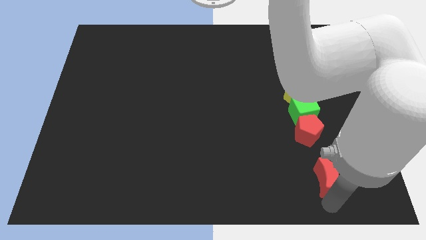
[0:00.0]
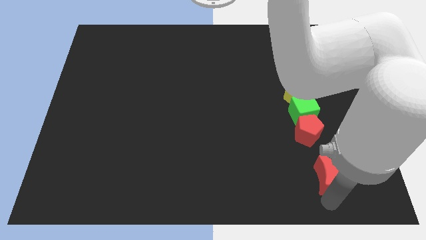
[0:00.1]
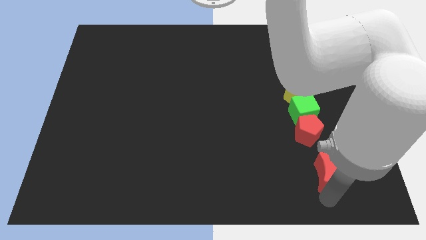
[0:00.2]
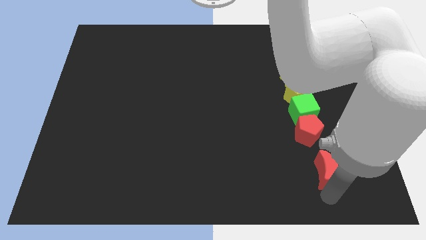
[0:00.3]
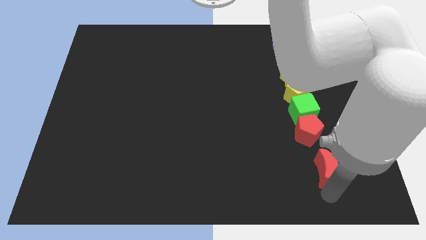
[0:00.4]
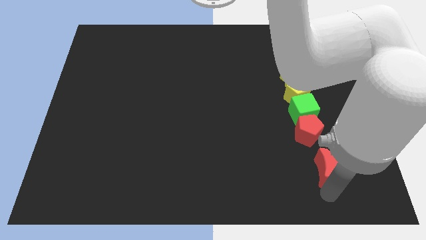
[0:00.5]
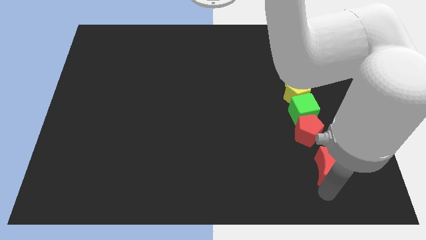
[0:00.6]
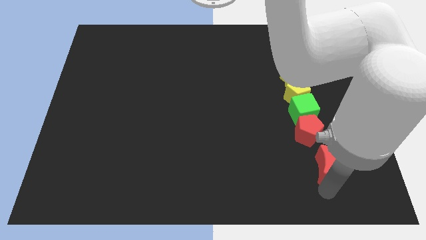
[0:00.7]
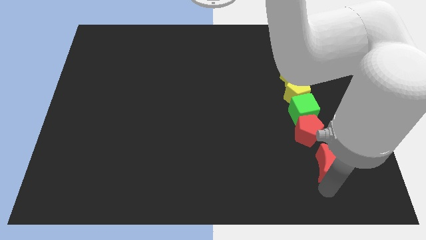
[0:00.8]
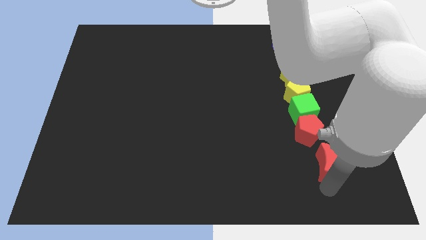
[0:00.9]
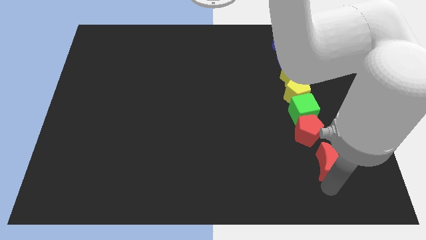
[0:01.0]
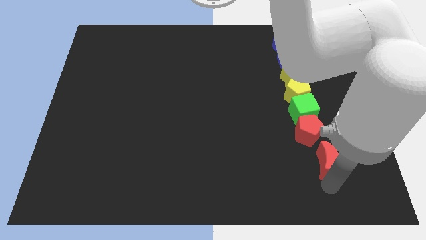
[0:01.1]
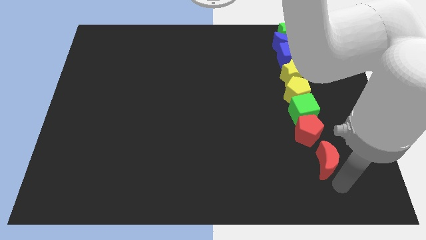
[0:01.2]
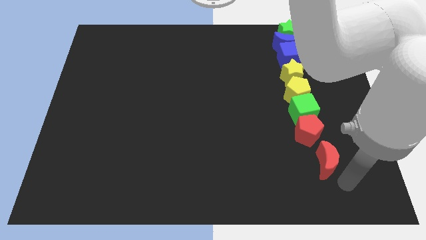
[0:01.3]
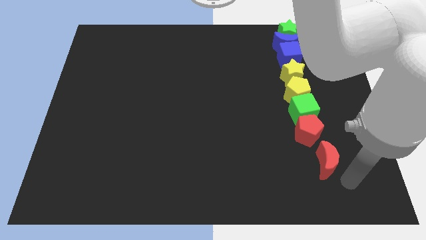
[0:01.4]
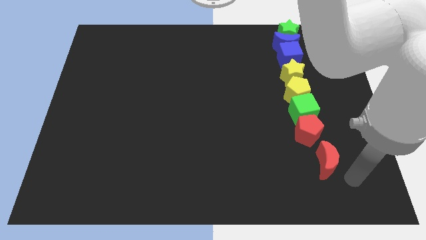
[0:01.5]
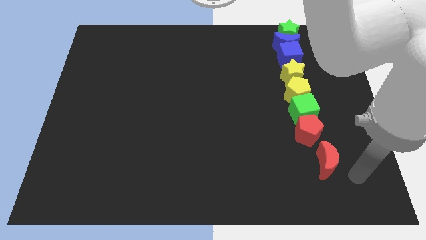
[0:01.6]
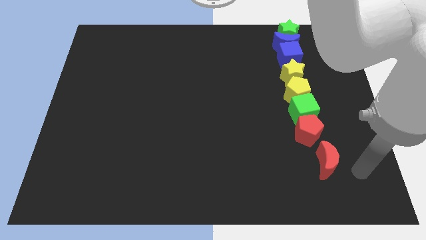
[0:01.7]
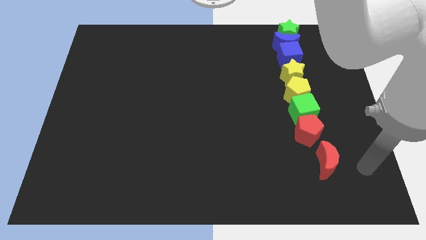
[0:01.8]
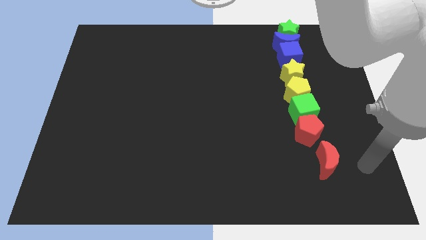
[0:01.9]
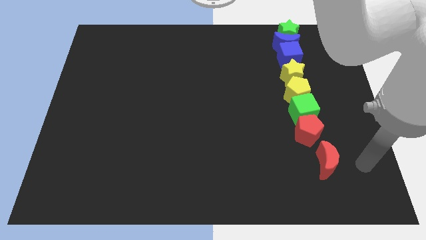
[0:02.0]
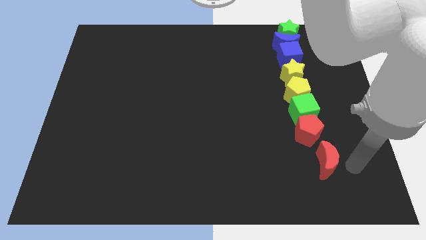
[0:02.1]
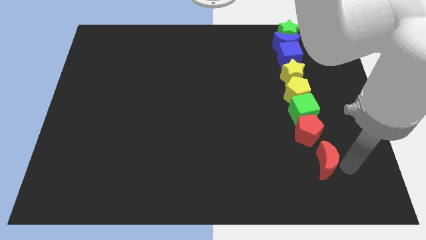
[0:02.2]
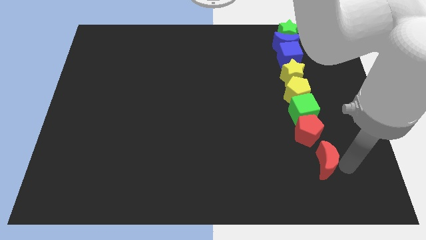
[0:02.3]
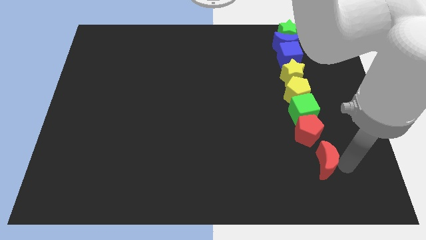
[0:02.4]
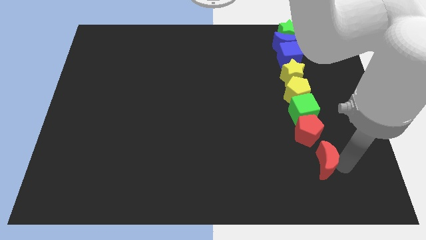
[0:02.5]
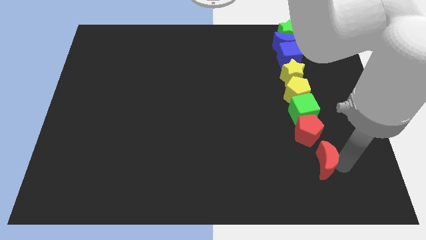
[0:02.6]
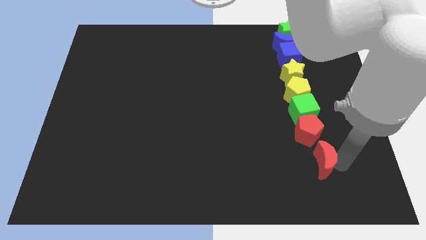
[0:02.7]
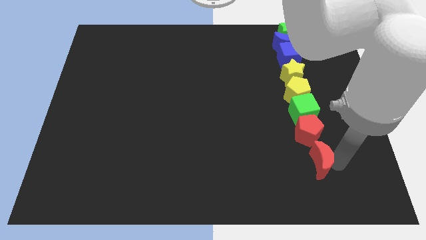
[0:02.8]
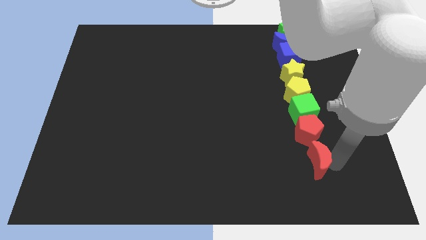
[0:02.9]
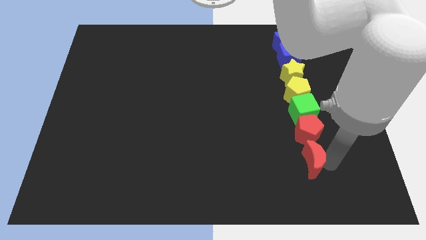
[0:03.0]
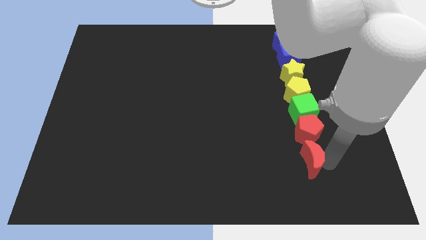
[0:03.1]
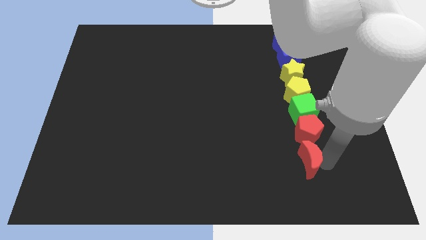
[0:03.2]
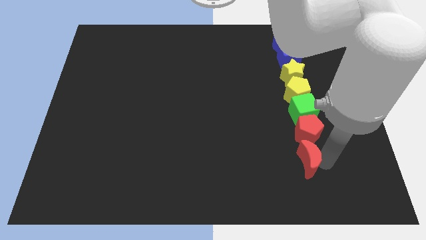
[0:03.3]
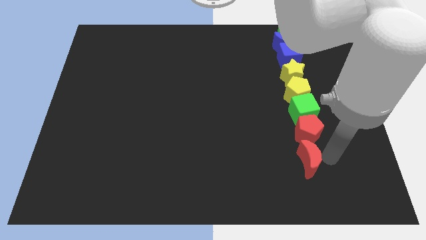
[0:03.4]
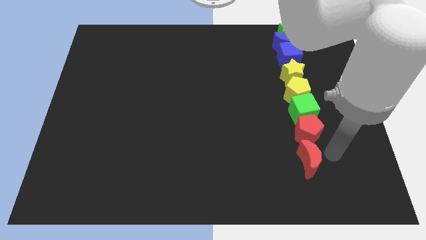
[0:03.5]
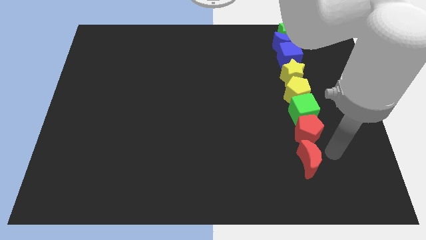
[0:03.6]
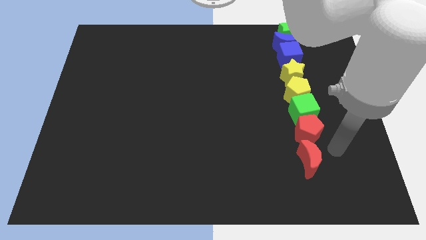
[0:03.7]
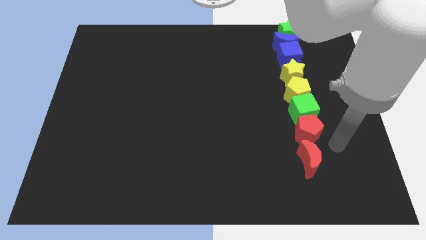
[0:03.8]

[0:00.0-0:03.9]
move the red crescent bottom to the red pentagon

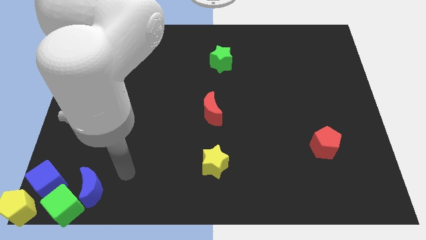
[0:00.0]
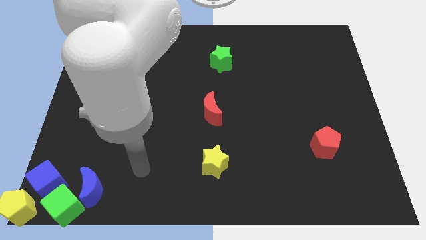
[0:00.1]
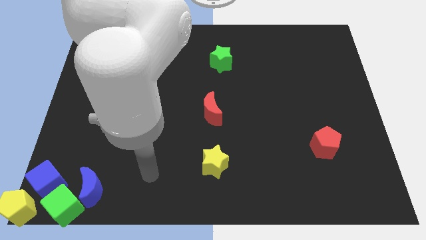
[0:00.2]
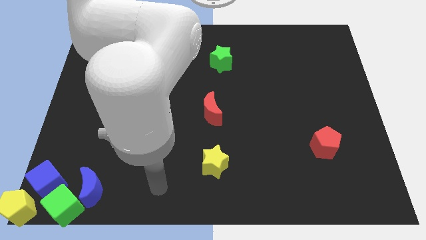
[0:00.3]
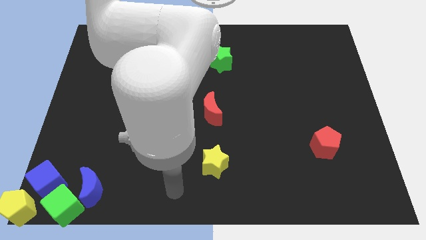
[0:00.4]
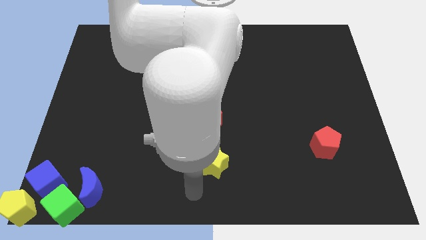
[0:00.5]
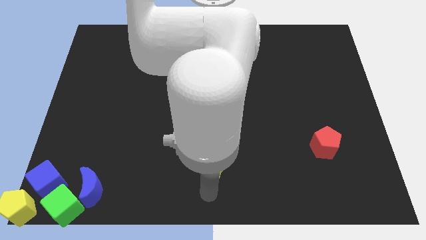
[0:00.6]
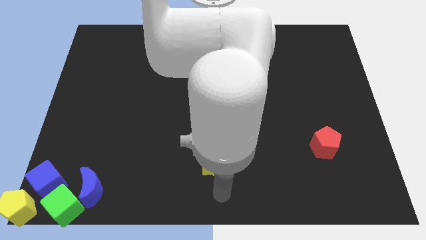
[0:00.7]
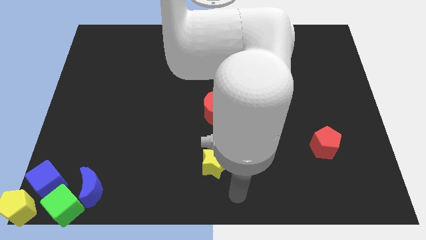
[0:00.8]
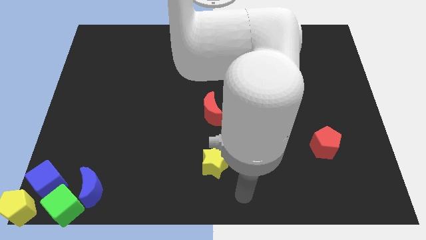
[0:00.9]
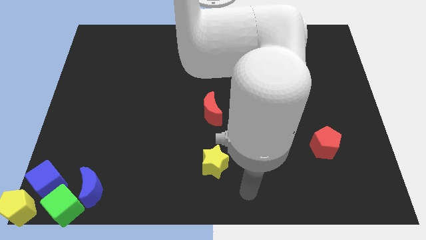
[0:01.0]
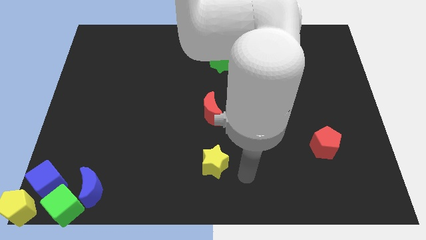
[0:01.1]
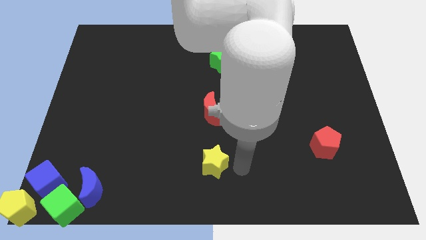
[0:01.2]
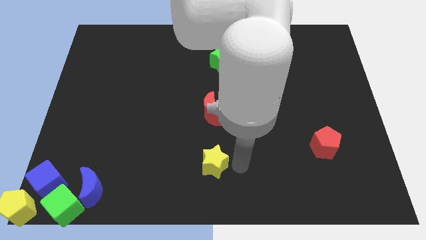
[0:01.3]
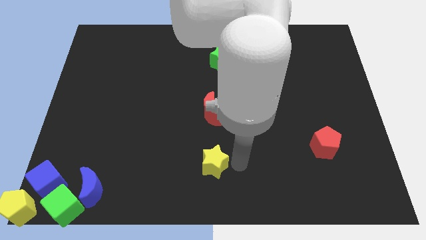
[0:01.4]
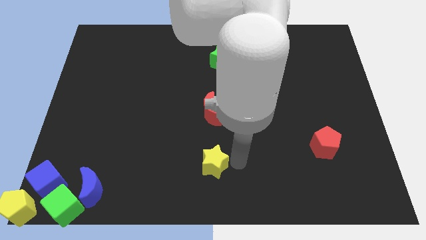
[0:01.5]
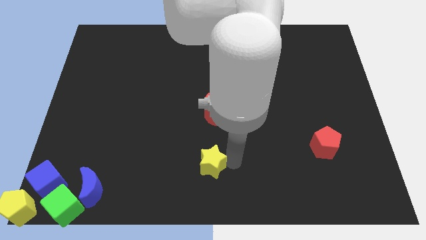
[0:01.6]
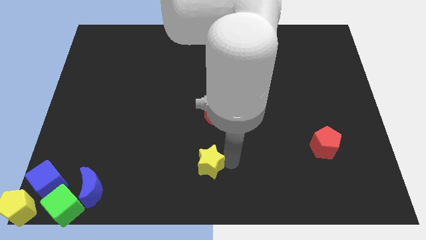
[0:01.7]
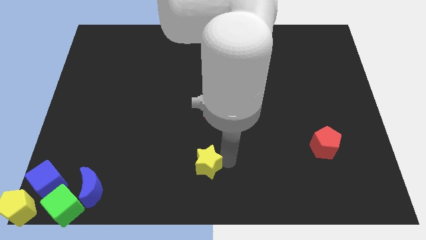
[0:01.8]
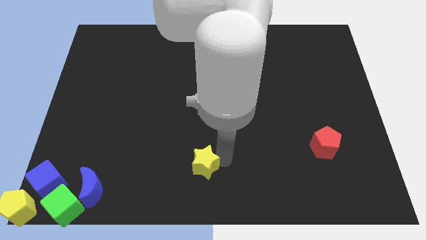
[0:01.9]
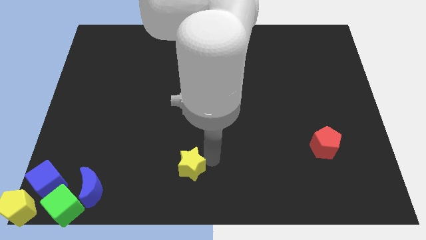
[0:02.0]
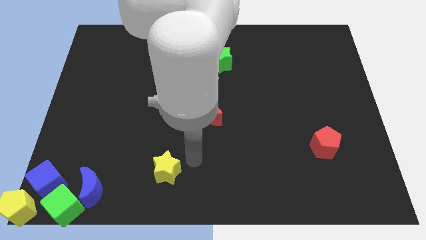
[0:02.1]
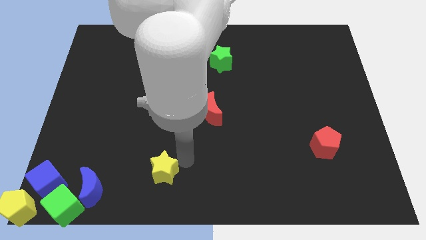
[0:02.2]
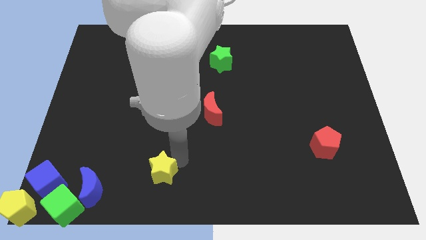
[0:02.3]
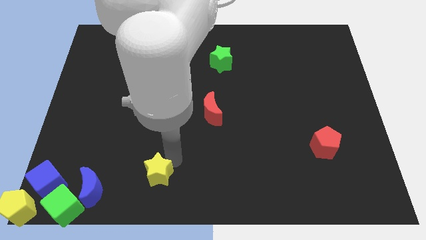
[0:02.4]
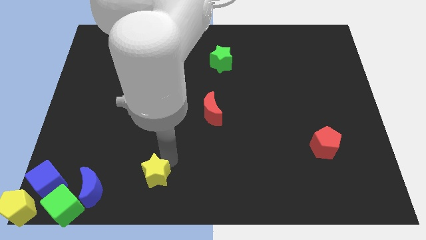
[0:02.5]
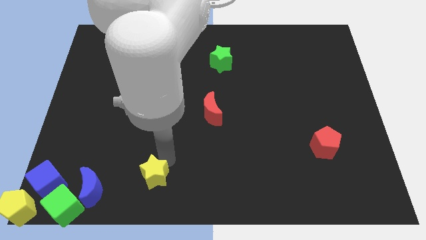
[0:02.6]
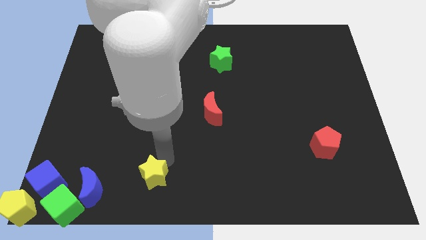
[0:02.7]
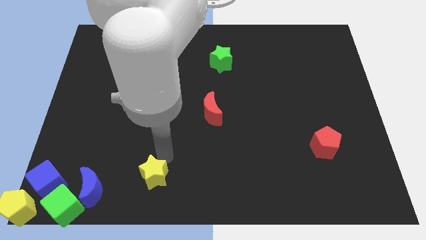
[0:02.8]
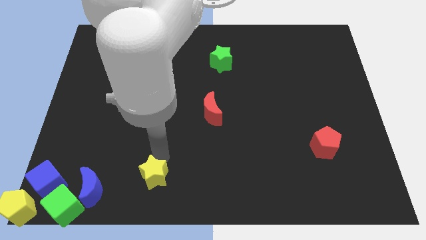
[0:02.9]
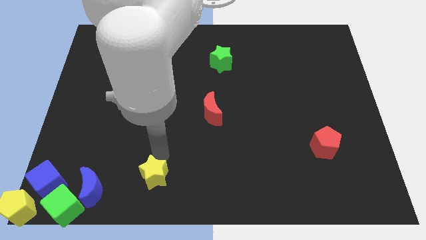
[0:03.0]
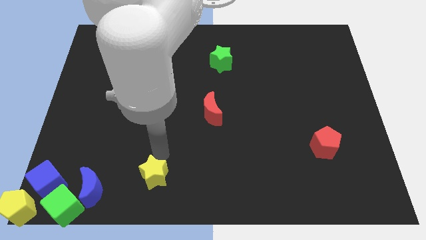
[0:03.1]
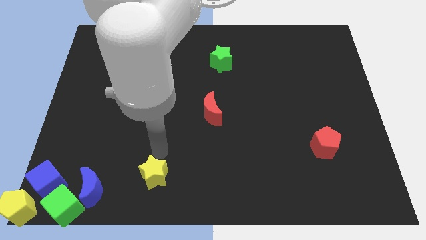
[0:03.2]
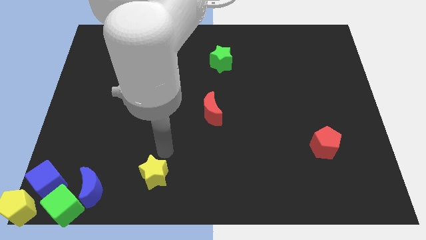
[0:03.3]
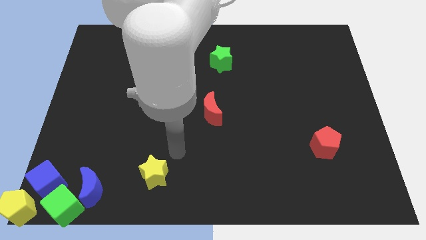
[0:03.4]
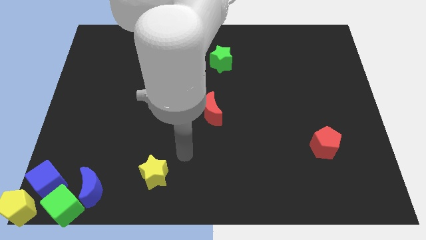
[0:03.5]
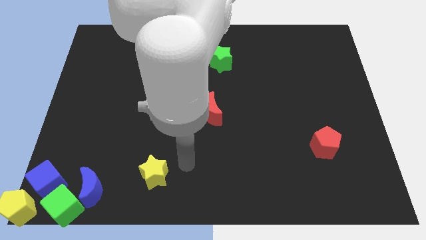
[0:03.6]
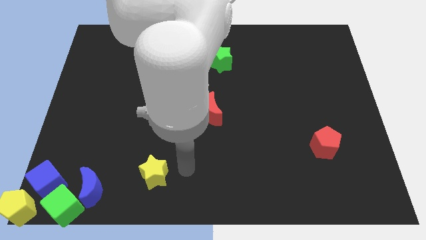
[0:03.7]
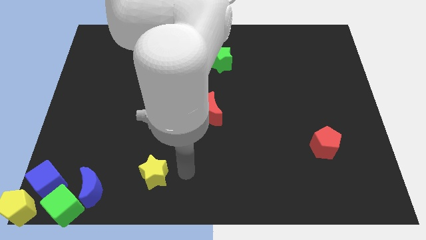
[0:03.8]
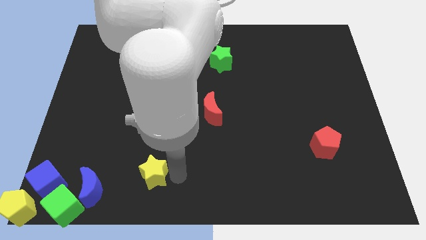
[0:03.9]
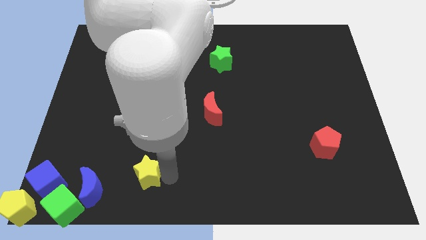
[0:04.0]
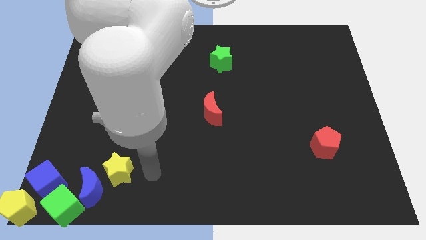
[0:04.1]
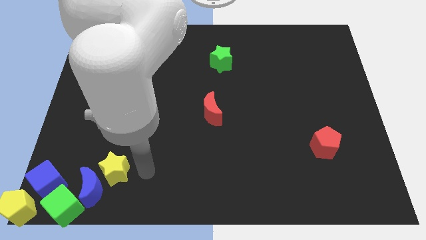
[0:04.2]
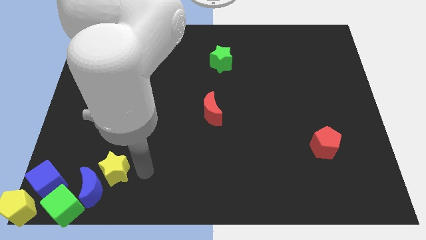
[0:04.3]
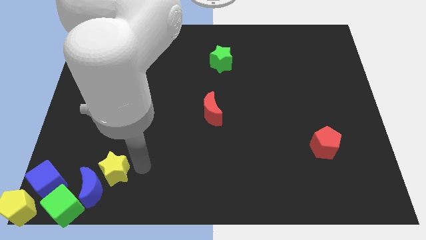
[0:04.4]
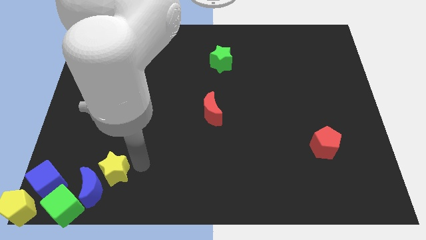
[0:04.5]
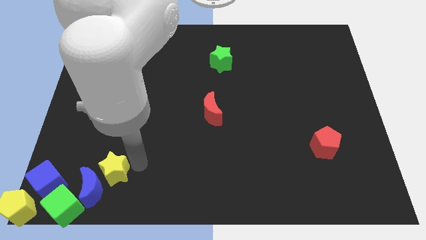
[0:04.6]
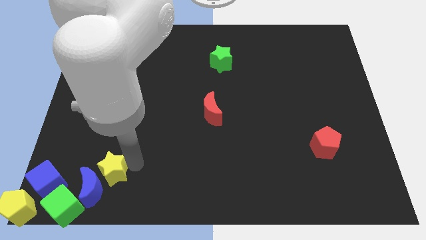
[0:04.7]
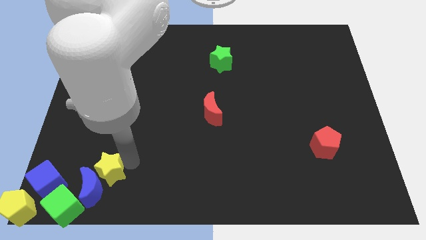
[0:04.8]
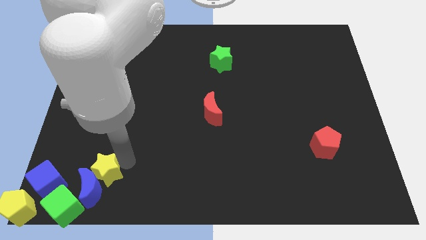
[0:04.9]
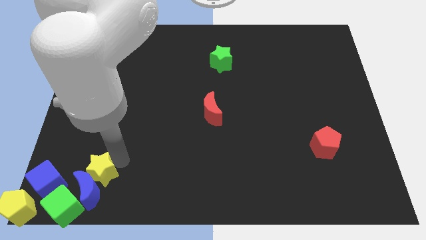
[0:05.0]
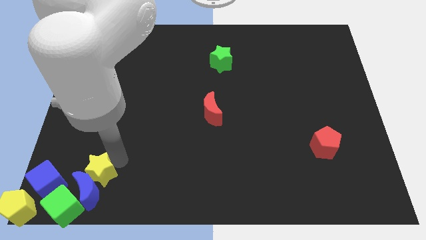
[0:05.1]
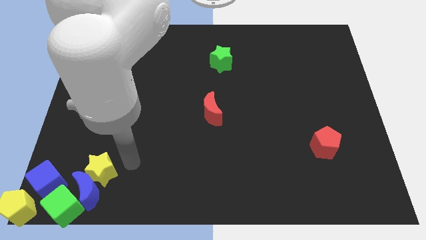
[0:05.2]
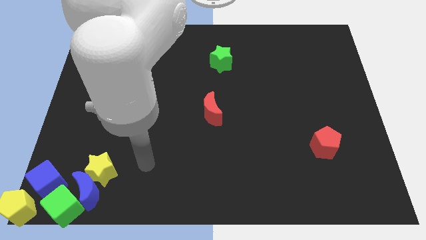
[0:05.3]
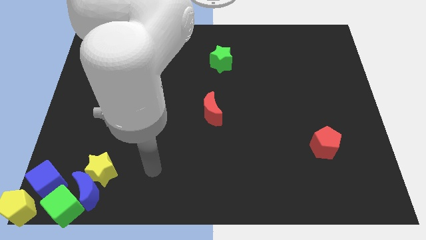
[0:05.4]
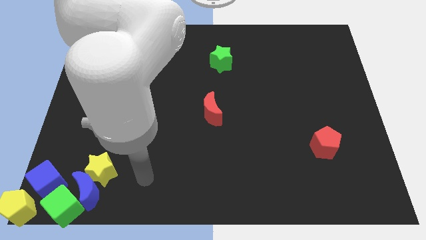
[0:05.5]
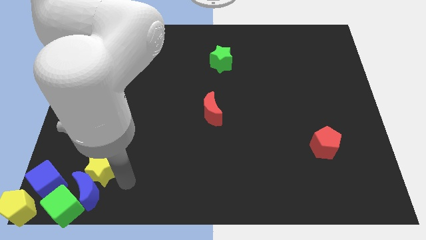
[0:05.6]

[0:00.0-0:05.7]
push the yellow star into the blue crescent
